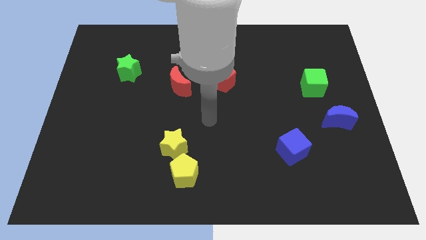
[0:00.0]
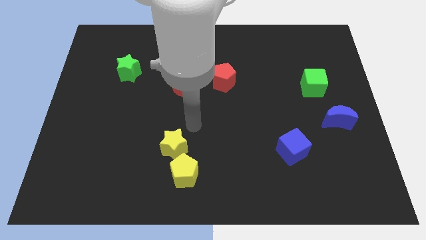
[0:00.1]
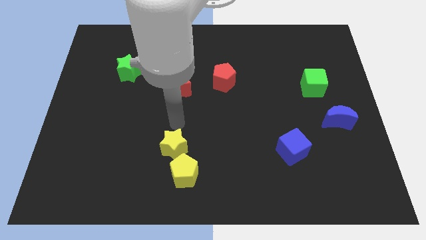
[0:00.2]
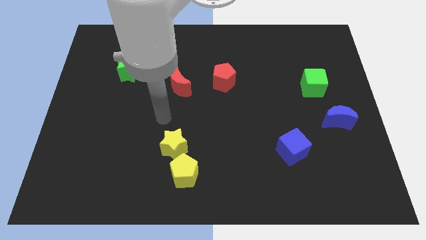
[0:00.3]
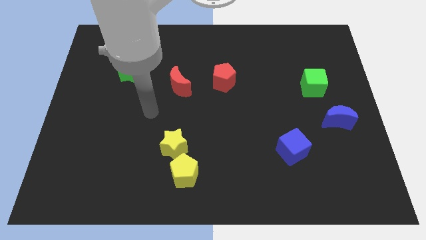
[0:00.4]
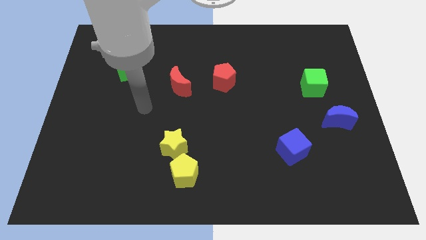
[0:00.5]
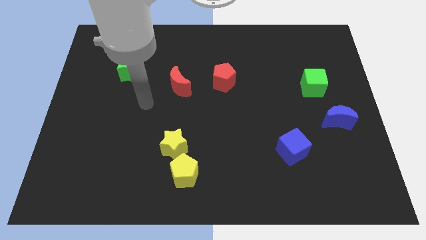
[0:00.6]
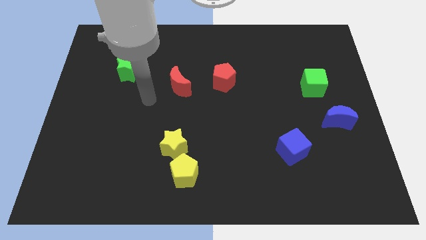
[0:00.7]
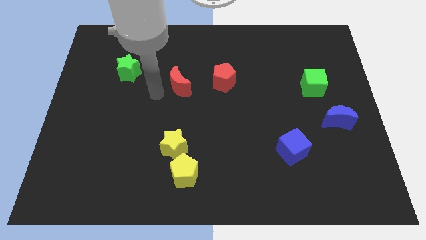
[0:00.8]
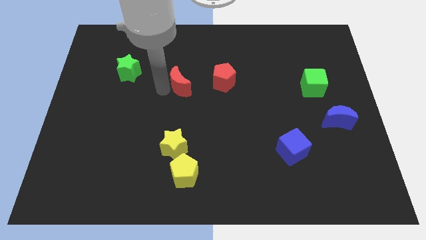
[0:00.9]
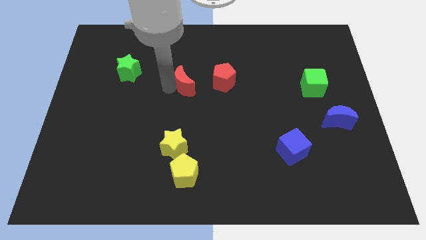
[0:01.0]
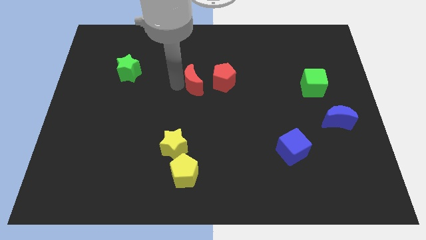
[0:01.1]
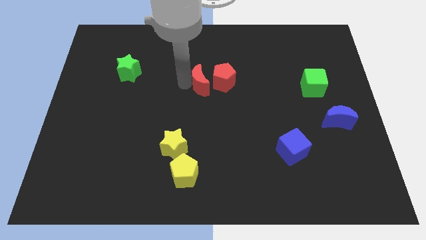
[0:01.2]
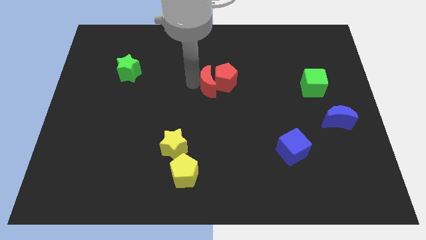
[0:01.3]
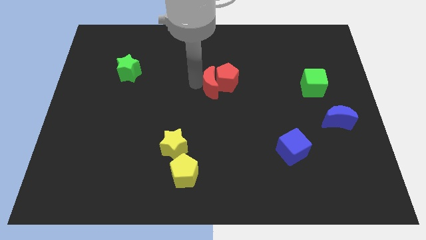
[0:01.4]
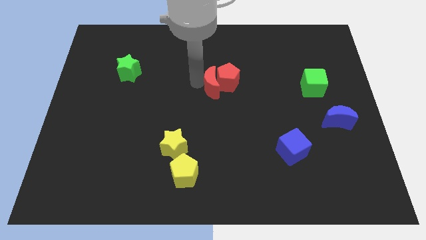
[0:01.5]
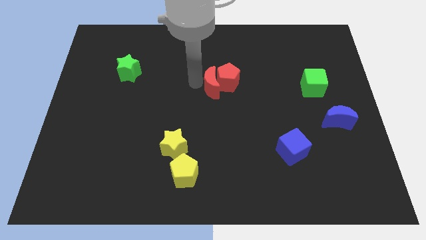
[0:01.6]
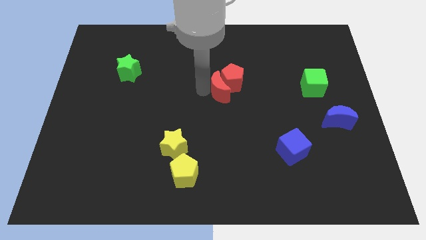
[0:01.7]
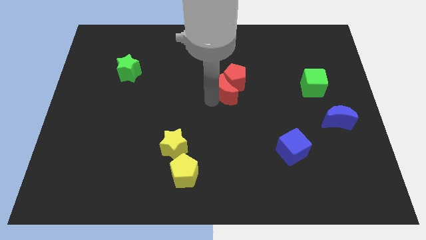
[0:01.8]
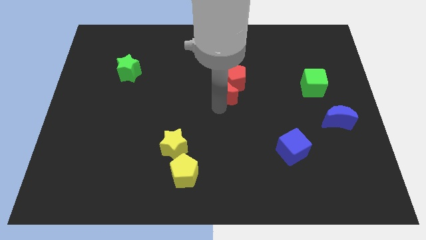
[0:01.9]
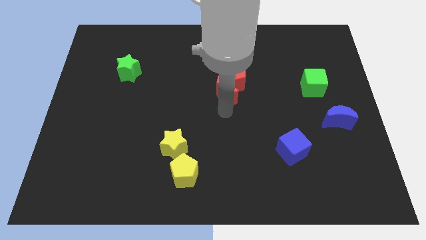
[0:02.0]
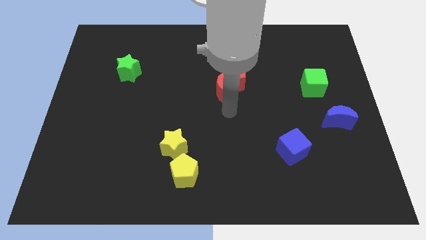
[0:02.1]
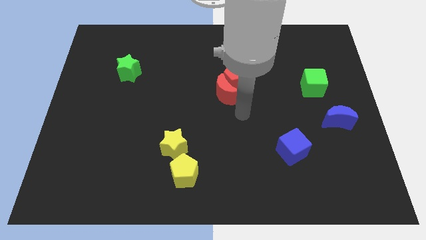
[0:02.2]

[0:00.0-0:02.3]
push the red crescent into the red pentagon

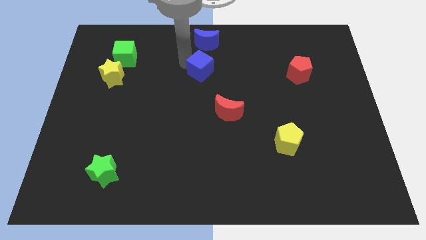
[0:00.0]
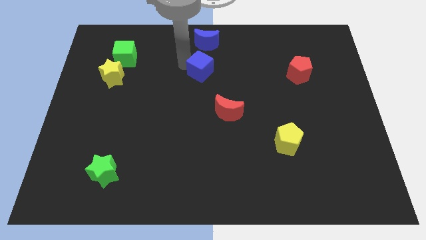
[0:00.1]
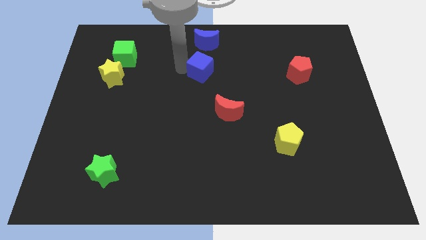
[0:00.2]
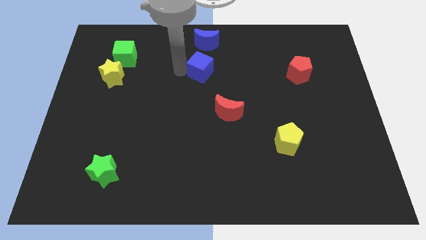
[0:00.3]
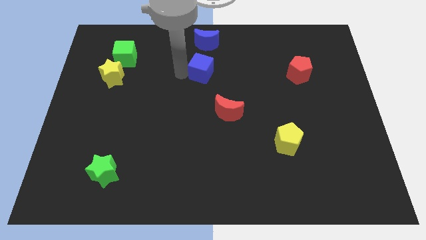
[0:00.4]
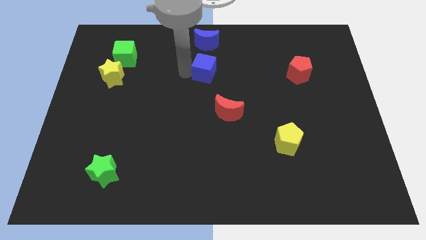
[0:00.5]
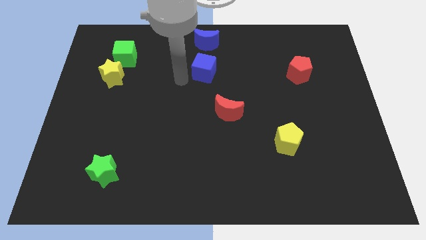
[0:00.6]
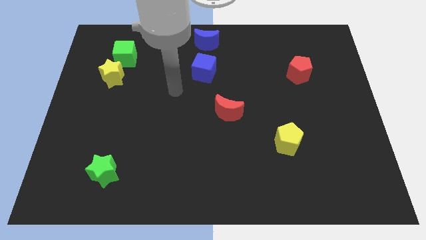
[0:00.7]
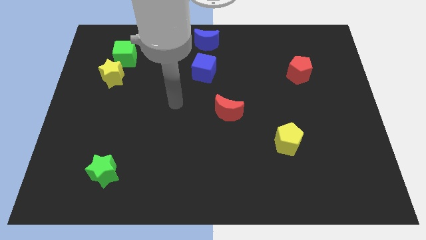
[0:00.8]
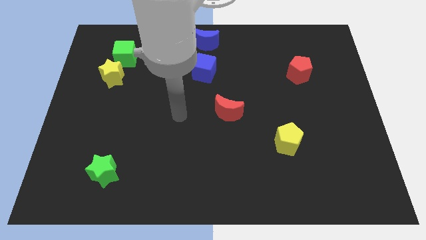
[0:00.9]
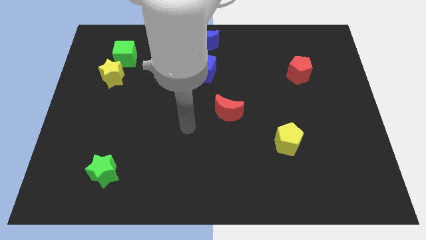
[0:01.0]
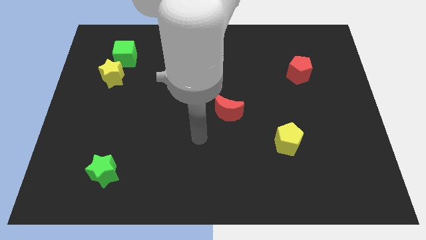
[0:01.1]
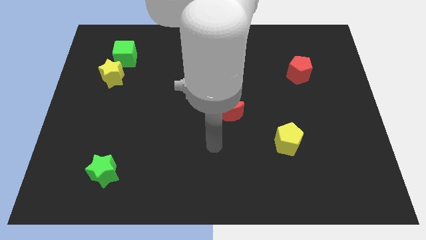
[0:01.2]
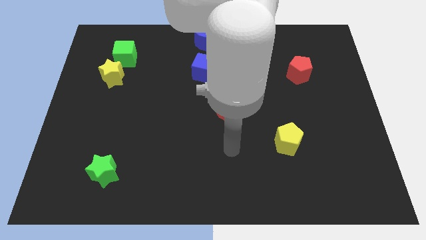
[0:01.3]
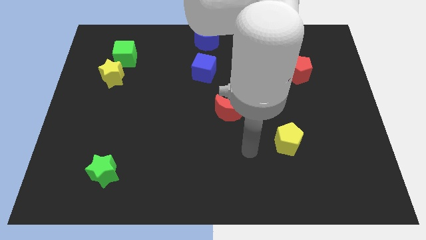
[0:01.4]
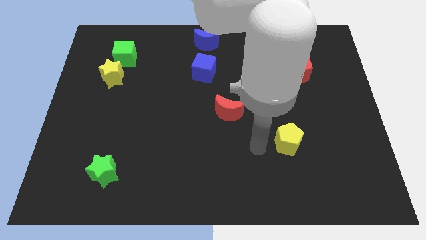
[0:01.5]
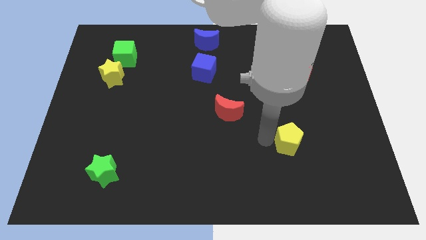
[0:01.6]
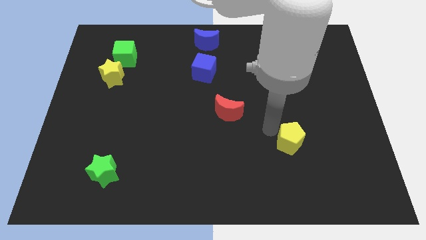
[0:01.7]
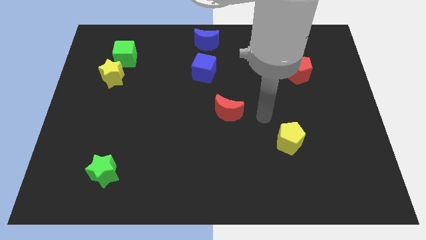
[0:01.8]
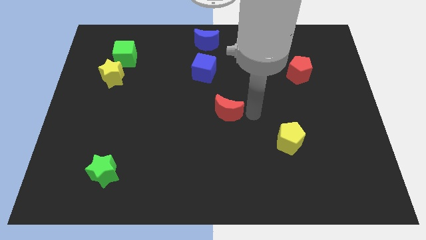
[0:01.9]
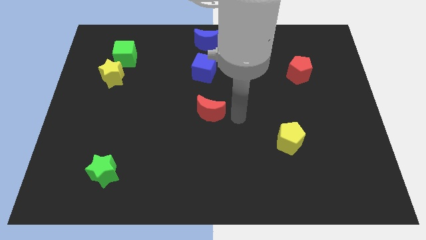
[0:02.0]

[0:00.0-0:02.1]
slightly move the blue cube to the bottom side of the blue moon

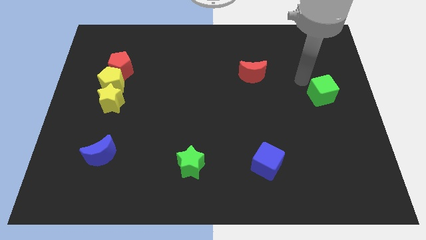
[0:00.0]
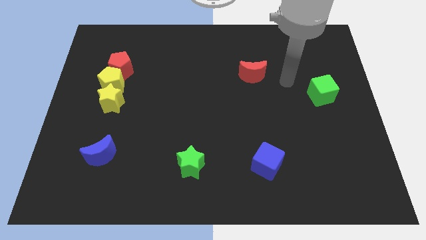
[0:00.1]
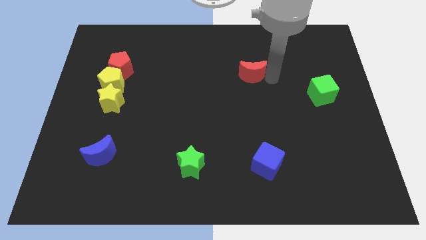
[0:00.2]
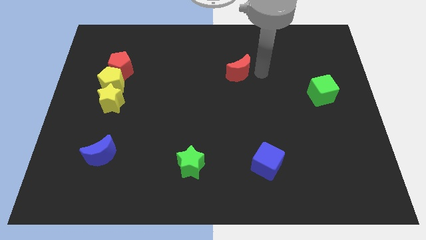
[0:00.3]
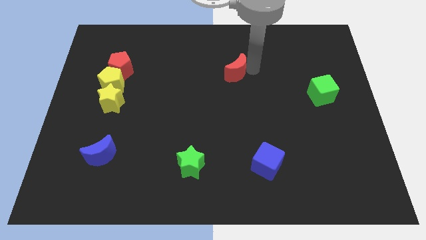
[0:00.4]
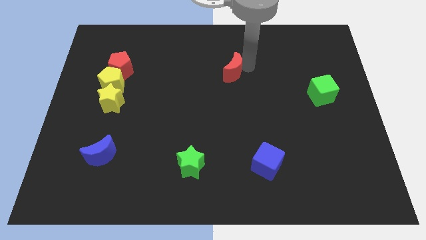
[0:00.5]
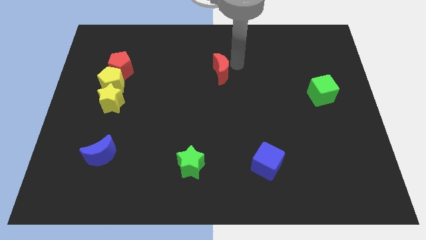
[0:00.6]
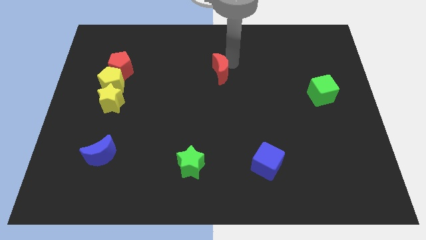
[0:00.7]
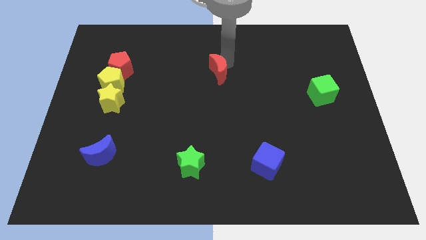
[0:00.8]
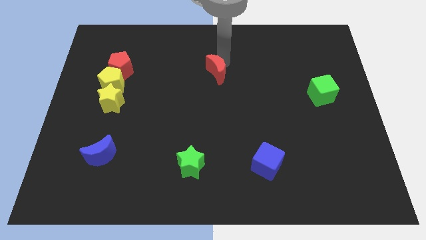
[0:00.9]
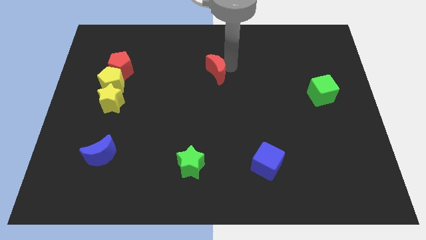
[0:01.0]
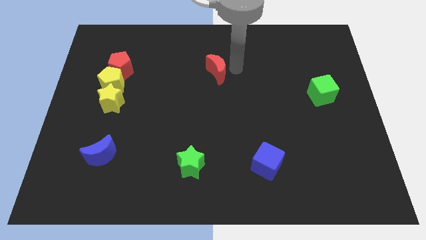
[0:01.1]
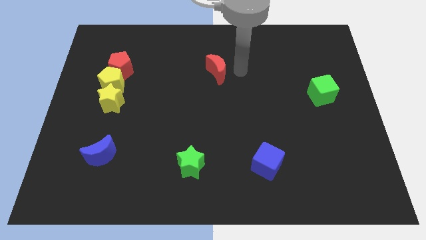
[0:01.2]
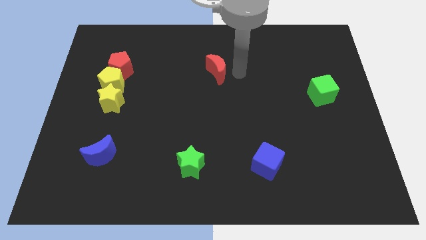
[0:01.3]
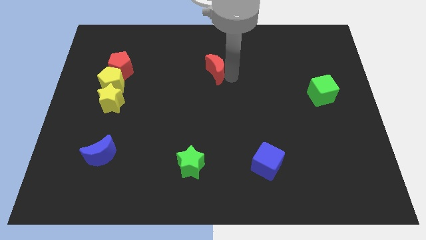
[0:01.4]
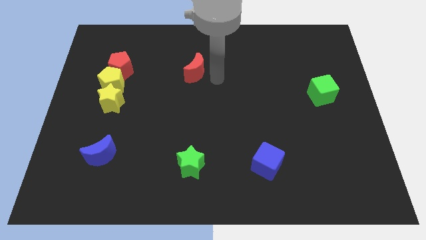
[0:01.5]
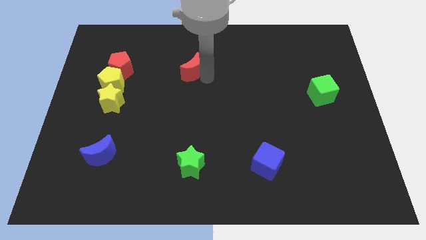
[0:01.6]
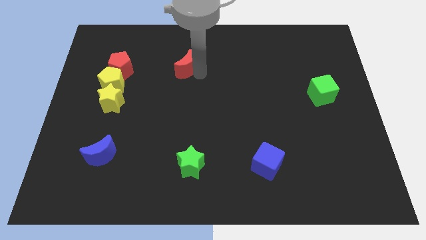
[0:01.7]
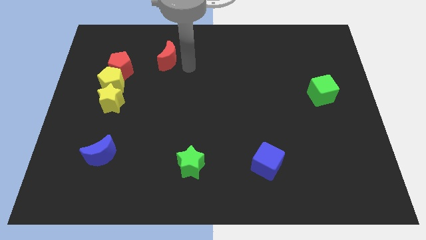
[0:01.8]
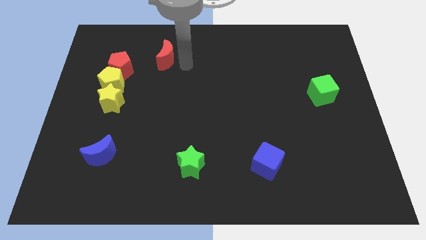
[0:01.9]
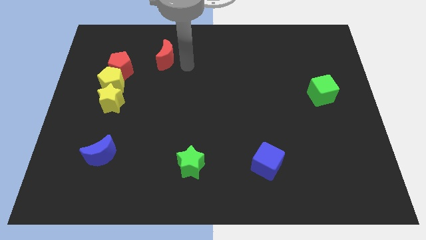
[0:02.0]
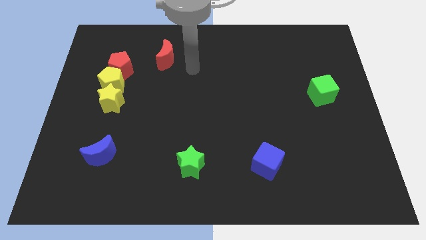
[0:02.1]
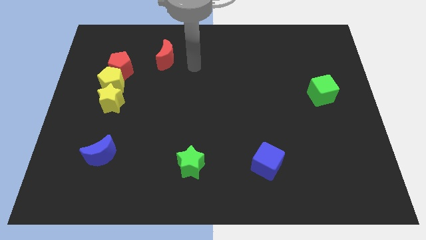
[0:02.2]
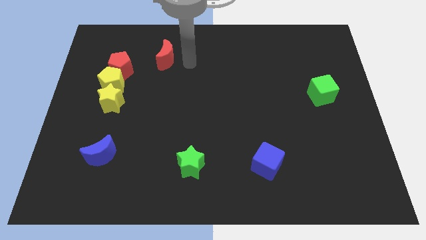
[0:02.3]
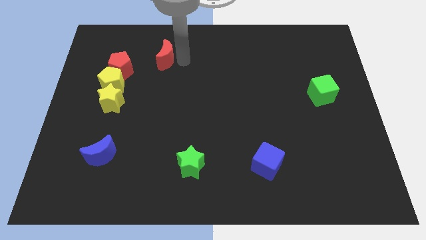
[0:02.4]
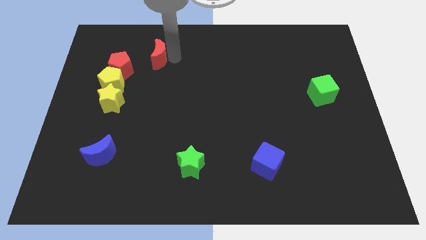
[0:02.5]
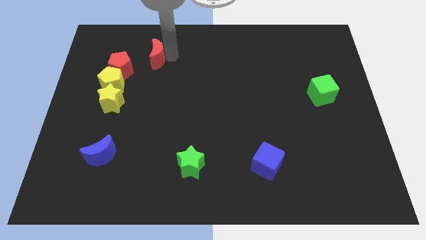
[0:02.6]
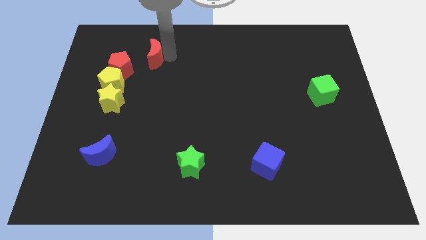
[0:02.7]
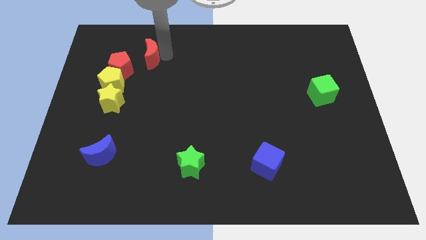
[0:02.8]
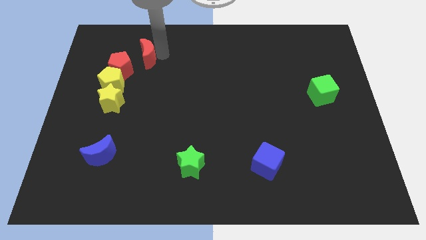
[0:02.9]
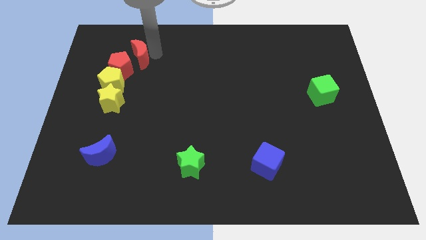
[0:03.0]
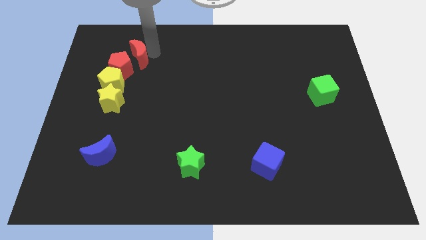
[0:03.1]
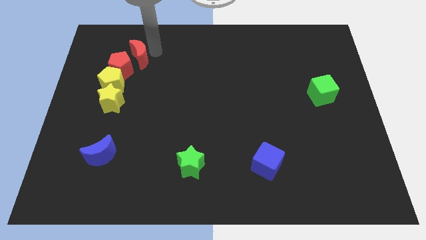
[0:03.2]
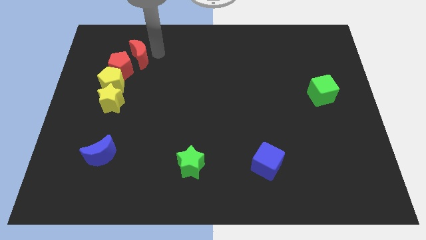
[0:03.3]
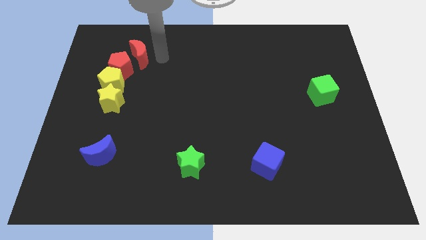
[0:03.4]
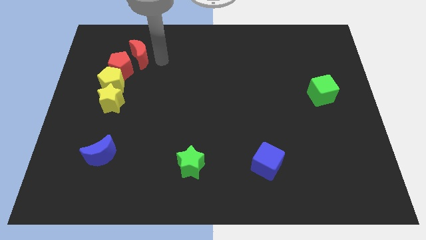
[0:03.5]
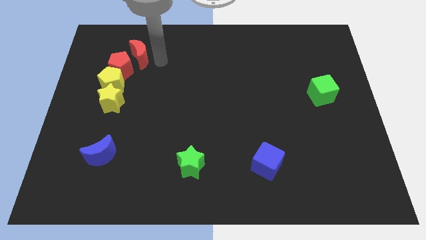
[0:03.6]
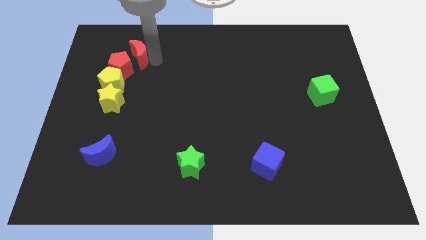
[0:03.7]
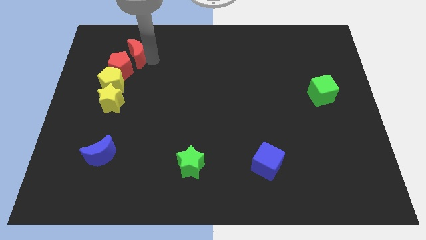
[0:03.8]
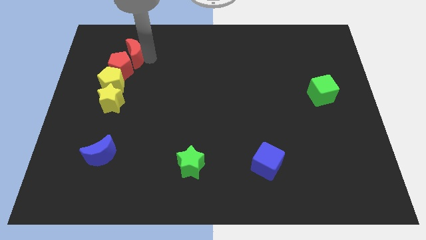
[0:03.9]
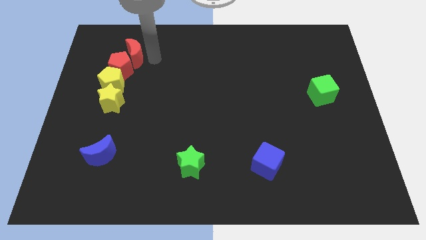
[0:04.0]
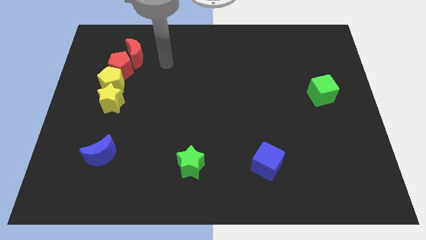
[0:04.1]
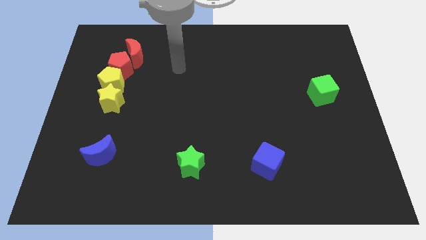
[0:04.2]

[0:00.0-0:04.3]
place the red crescent above the red pentagon
